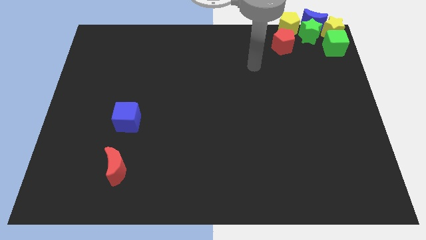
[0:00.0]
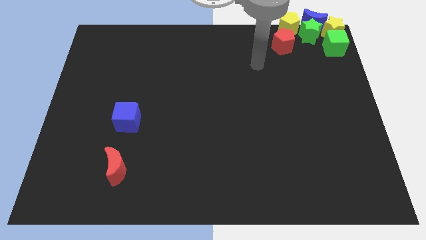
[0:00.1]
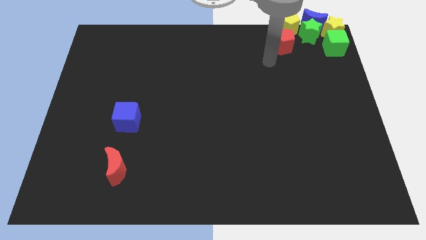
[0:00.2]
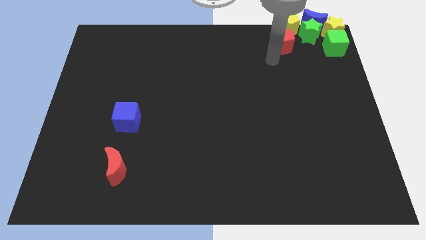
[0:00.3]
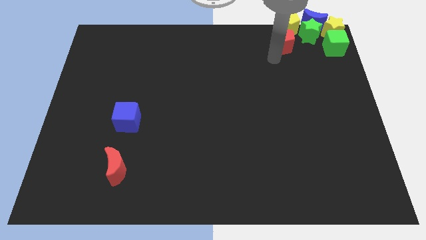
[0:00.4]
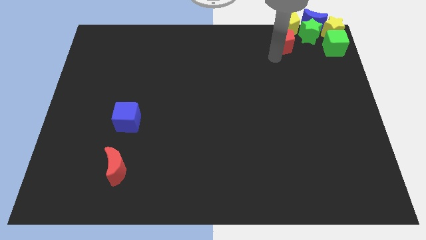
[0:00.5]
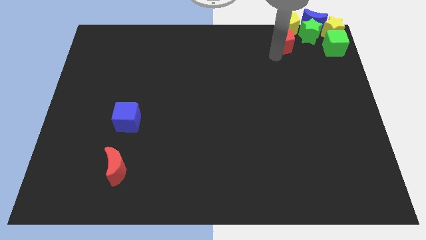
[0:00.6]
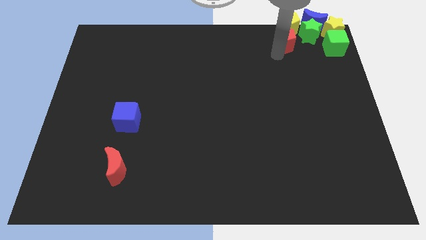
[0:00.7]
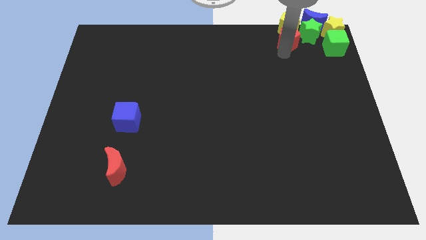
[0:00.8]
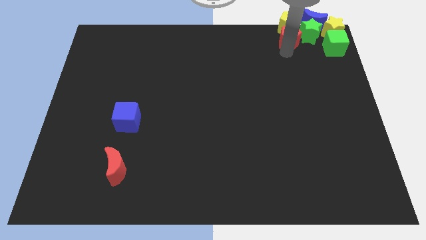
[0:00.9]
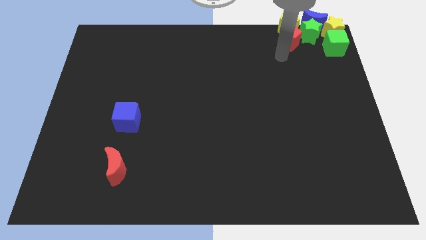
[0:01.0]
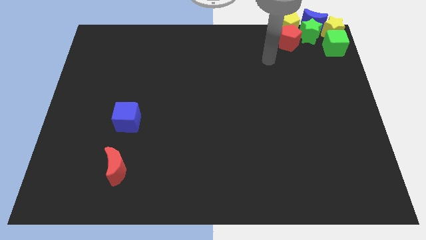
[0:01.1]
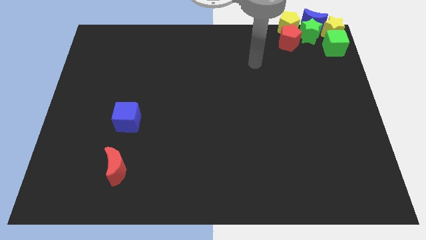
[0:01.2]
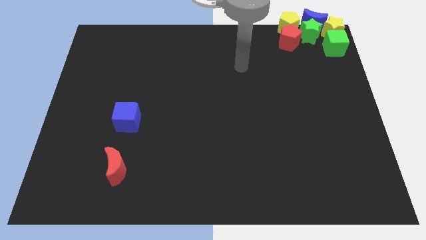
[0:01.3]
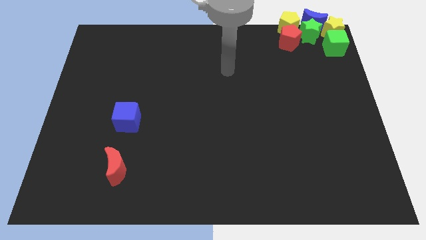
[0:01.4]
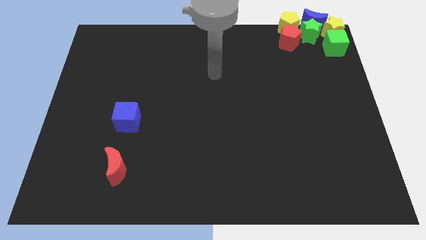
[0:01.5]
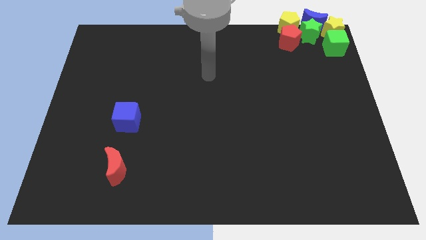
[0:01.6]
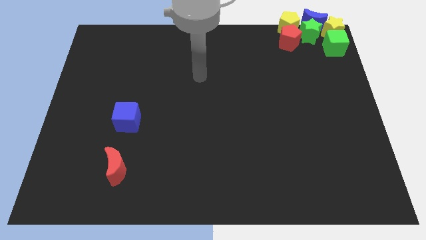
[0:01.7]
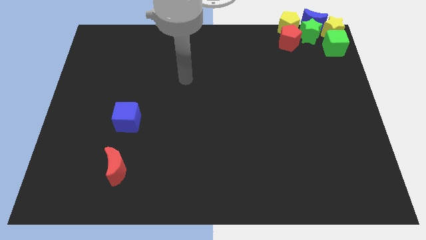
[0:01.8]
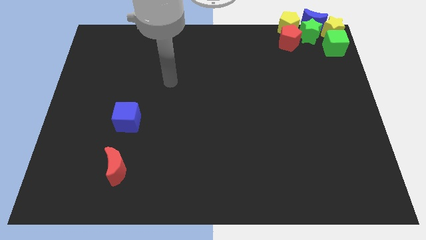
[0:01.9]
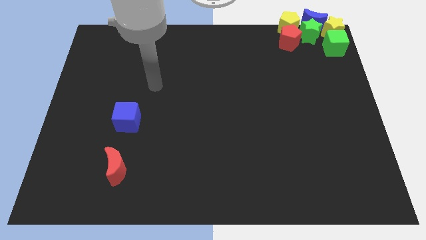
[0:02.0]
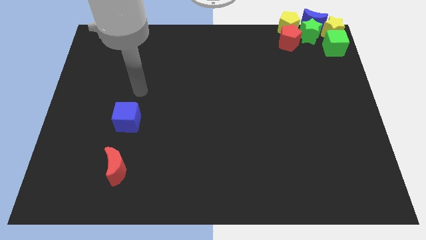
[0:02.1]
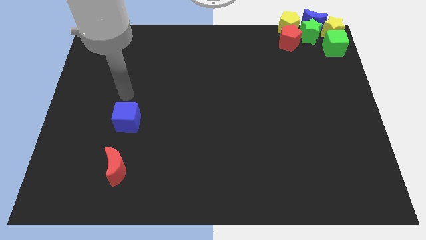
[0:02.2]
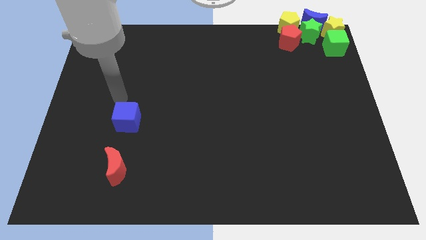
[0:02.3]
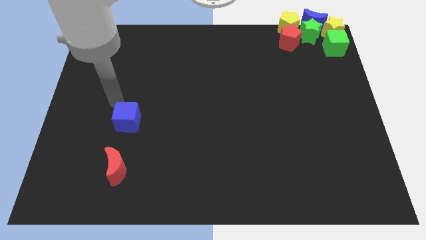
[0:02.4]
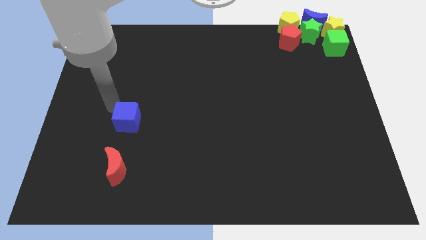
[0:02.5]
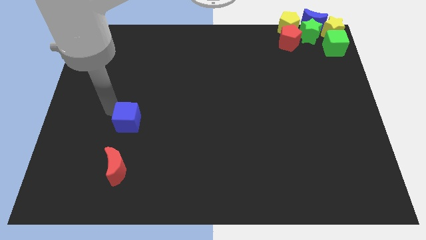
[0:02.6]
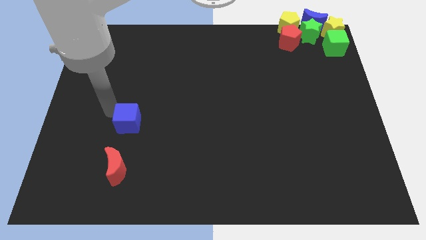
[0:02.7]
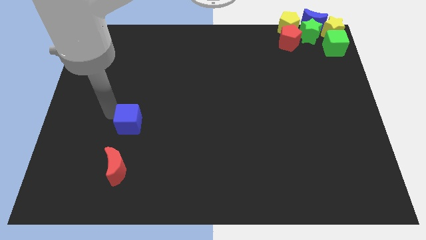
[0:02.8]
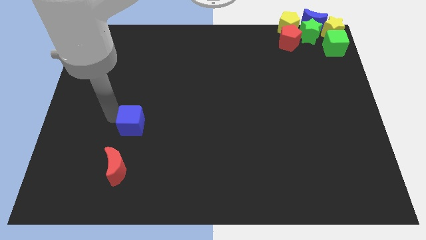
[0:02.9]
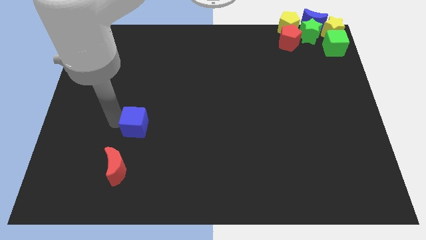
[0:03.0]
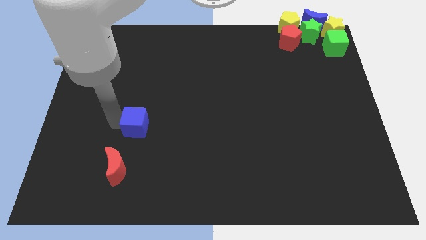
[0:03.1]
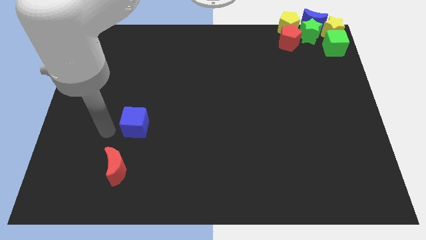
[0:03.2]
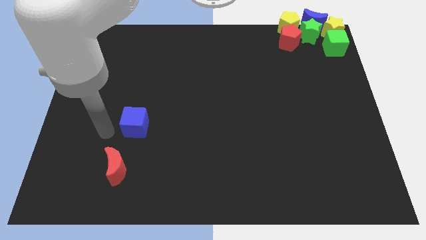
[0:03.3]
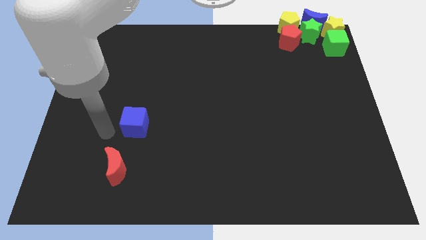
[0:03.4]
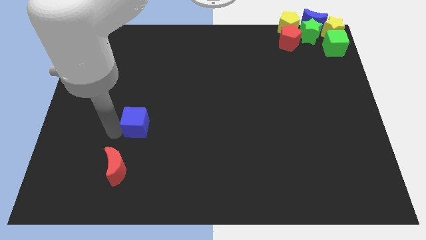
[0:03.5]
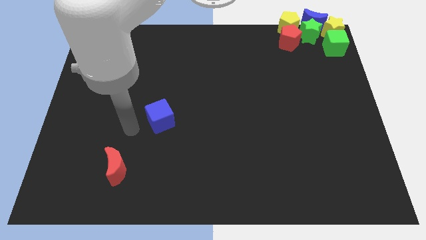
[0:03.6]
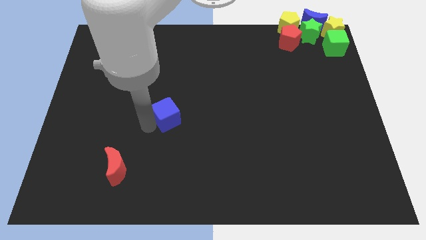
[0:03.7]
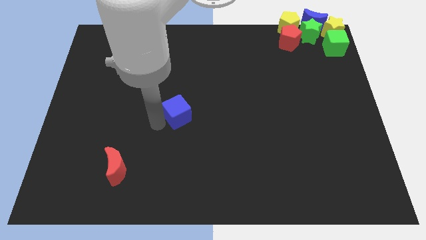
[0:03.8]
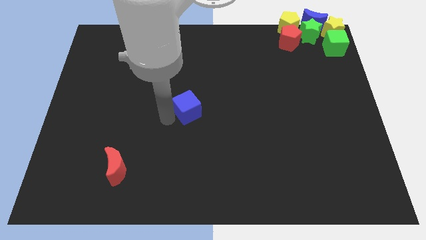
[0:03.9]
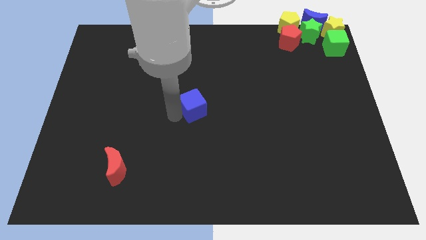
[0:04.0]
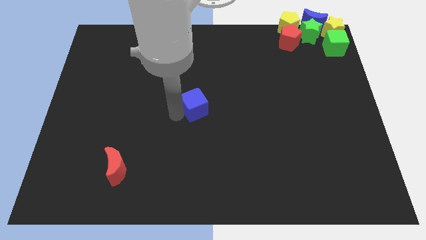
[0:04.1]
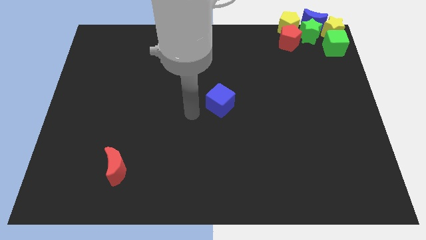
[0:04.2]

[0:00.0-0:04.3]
move blue cube to the middle of the board

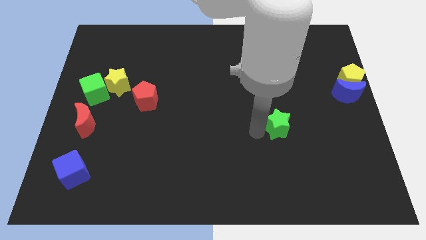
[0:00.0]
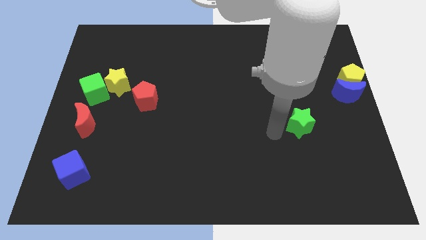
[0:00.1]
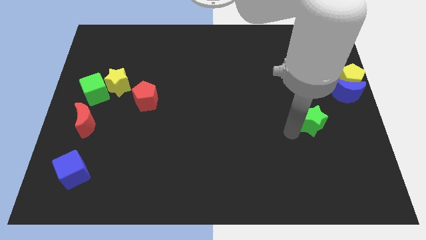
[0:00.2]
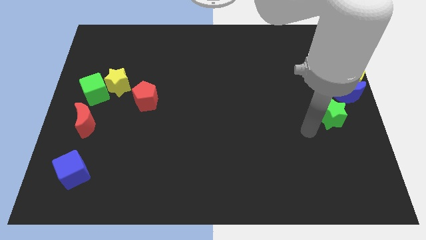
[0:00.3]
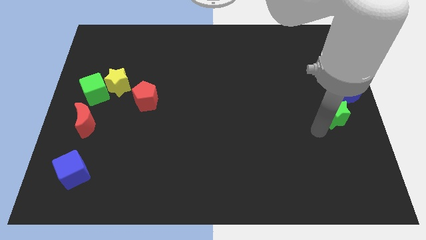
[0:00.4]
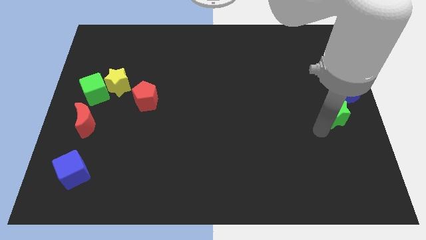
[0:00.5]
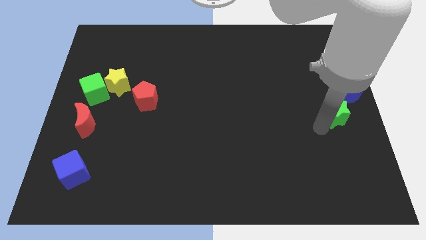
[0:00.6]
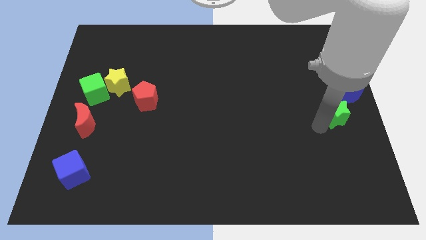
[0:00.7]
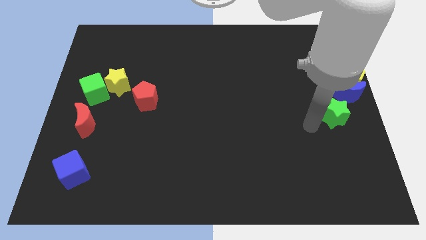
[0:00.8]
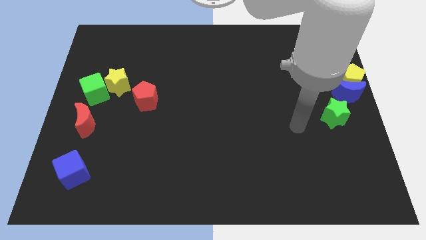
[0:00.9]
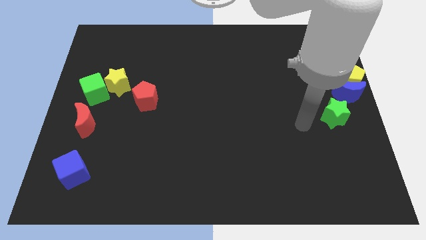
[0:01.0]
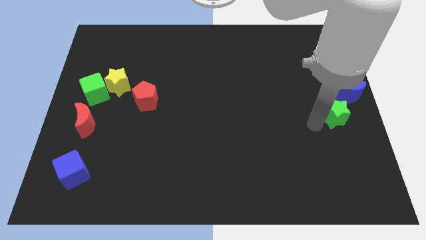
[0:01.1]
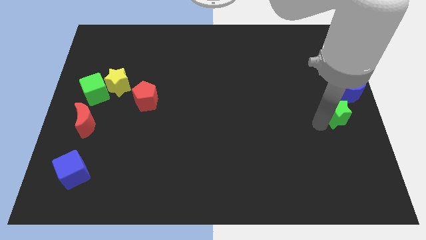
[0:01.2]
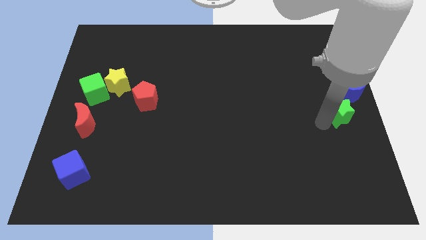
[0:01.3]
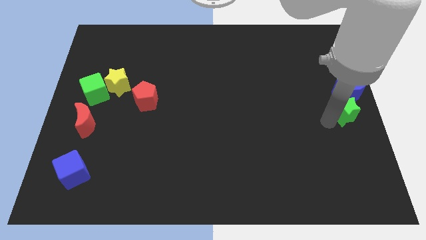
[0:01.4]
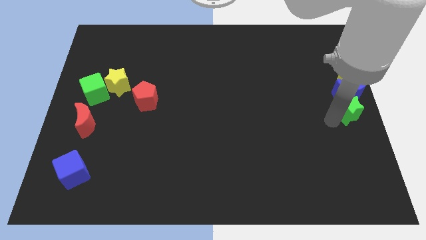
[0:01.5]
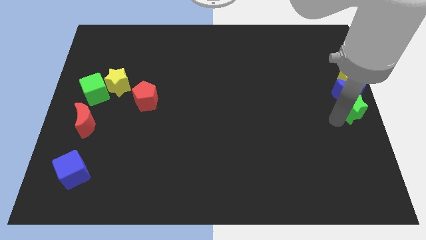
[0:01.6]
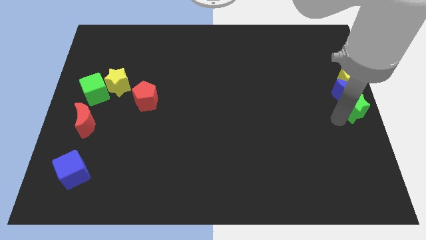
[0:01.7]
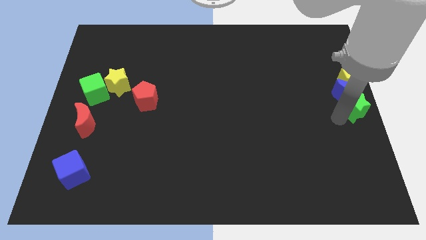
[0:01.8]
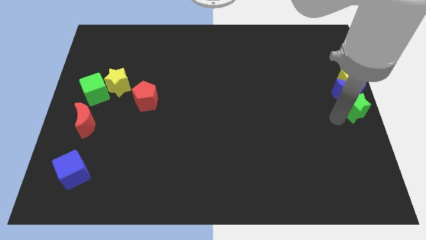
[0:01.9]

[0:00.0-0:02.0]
put the green star at the center right

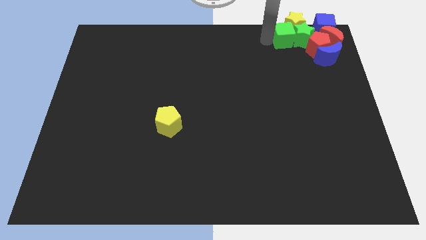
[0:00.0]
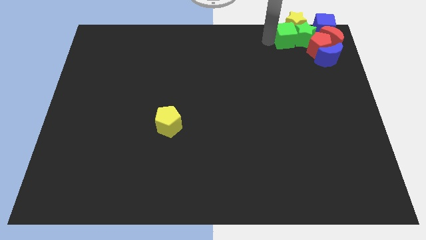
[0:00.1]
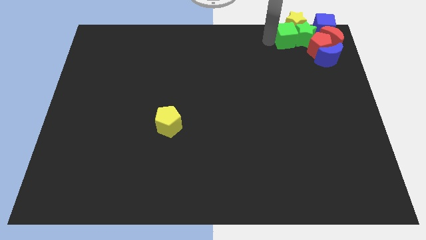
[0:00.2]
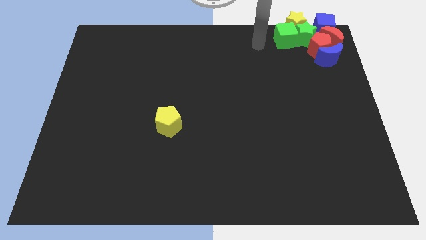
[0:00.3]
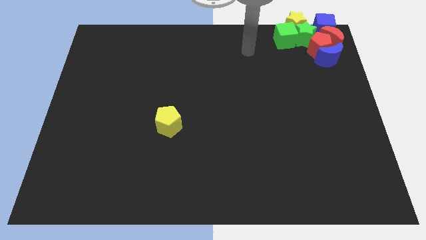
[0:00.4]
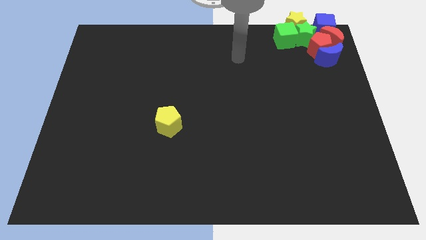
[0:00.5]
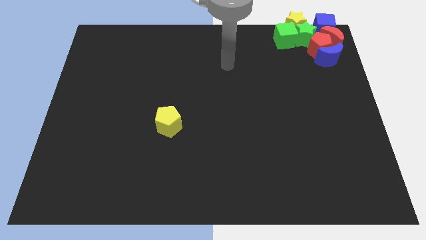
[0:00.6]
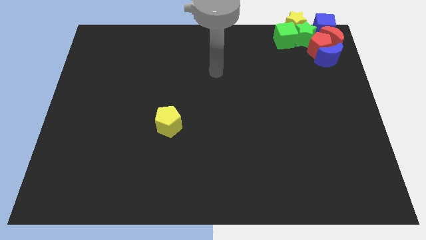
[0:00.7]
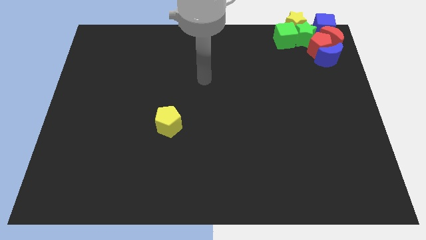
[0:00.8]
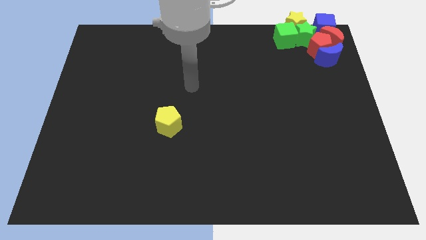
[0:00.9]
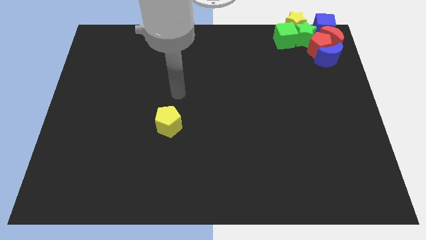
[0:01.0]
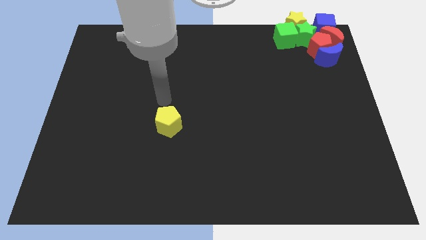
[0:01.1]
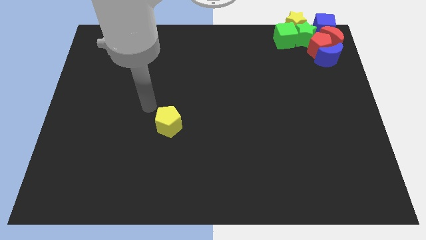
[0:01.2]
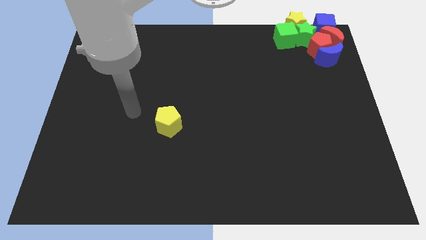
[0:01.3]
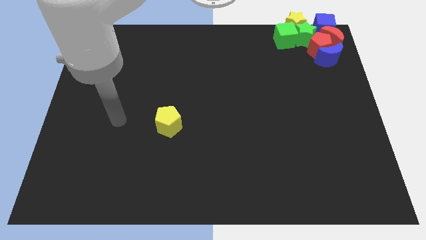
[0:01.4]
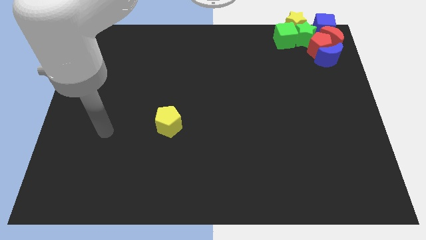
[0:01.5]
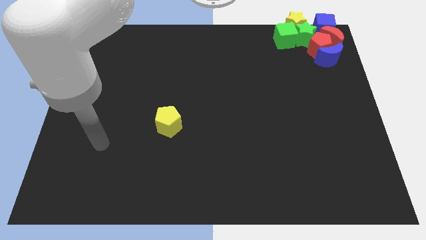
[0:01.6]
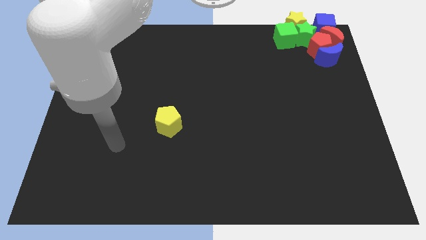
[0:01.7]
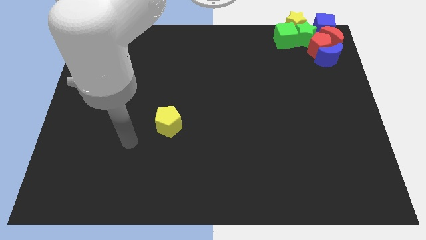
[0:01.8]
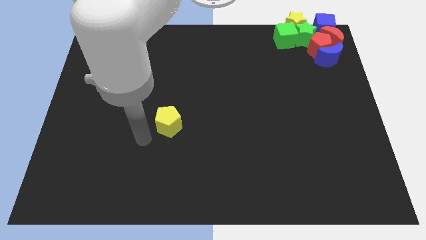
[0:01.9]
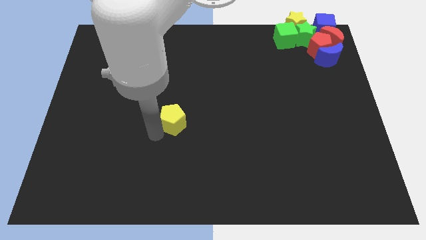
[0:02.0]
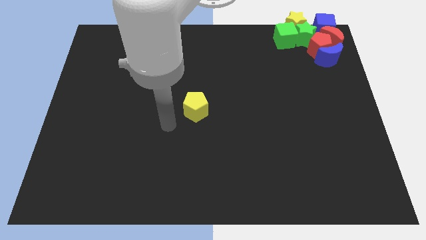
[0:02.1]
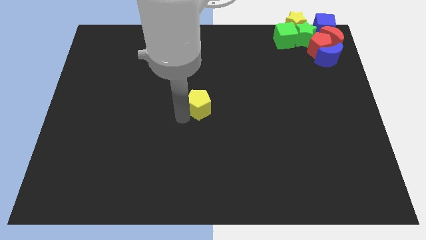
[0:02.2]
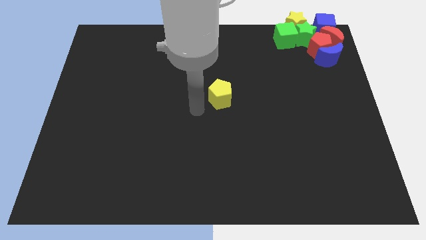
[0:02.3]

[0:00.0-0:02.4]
move yellow pentagon to the middle of the board

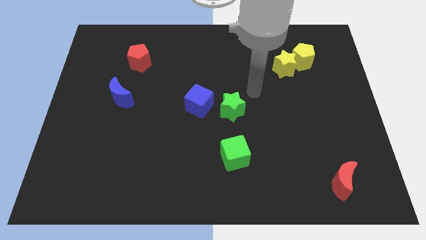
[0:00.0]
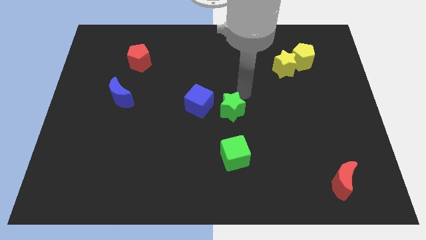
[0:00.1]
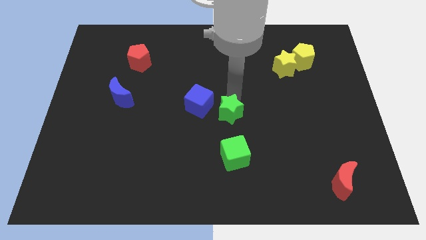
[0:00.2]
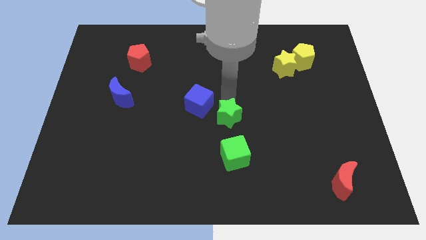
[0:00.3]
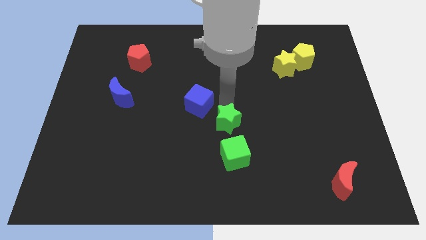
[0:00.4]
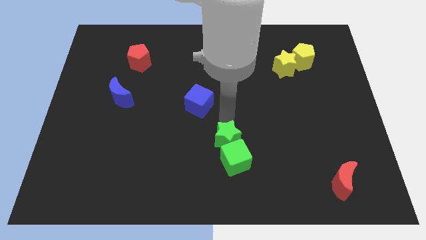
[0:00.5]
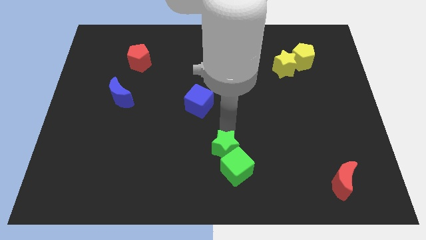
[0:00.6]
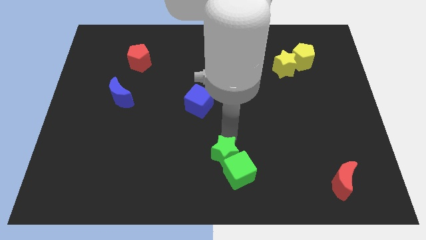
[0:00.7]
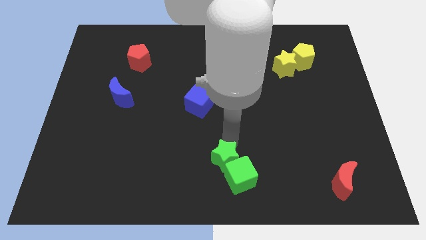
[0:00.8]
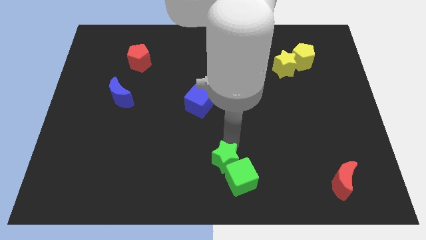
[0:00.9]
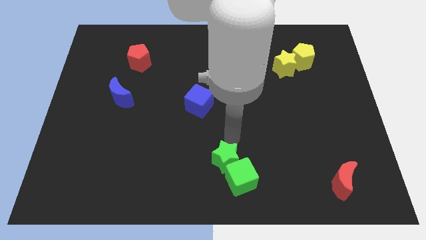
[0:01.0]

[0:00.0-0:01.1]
slide green star into green cube
